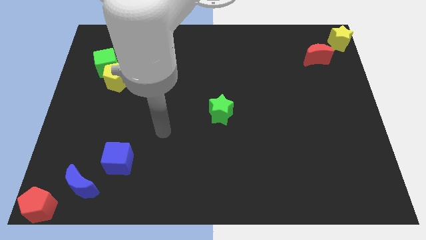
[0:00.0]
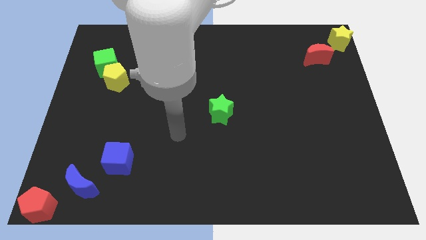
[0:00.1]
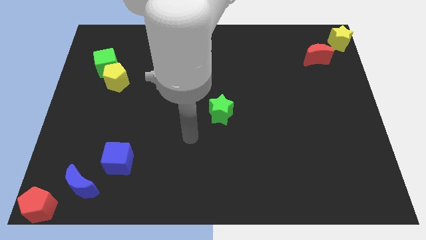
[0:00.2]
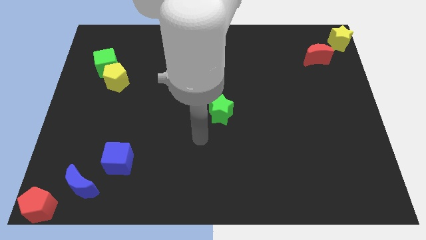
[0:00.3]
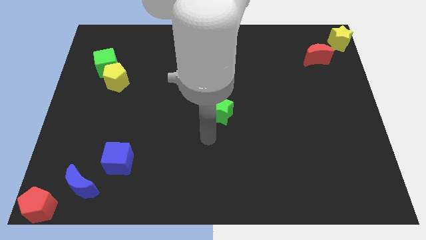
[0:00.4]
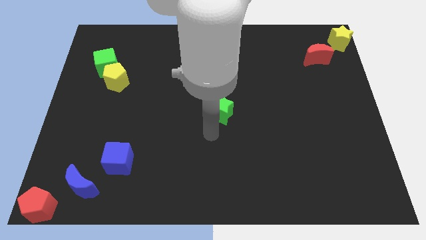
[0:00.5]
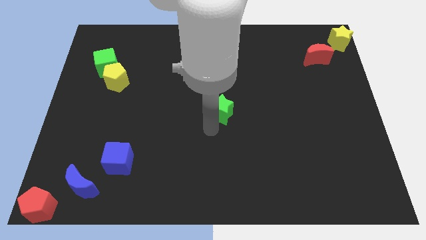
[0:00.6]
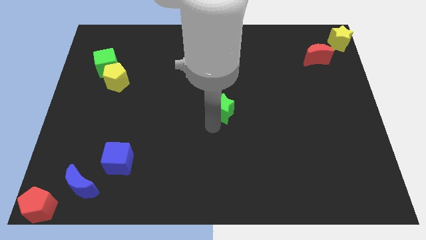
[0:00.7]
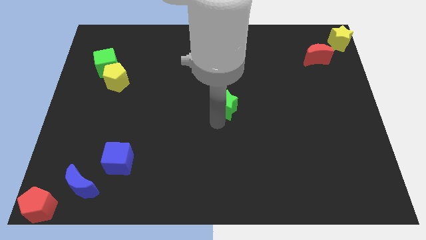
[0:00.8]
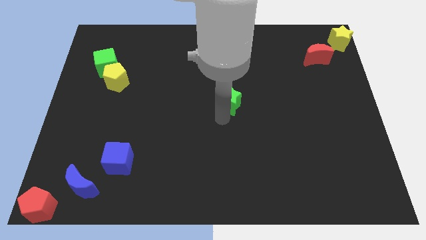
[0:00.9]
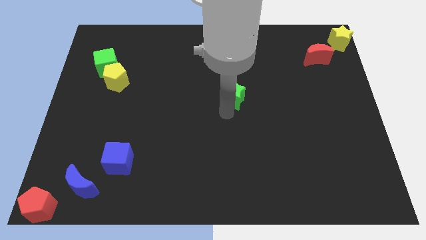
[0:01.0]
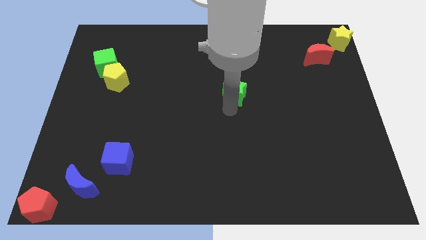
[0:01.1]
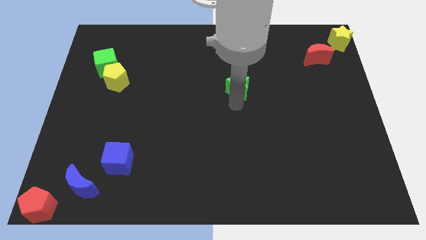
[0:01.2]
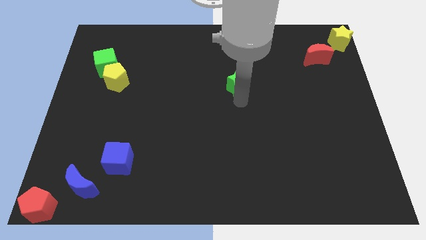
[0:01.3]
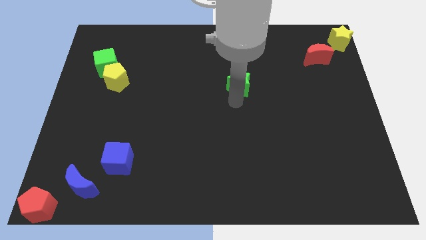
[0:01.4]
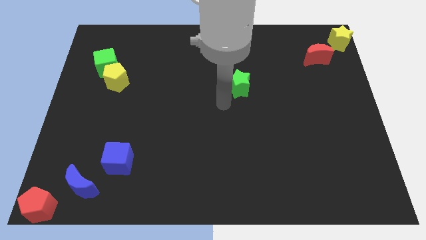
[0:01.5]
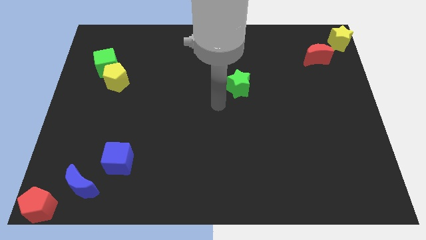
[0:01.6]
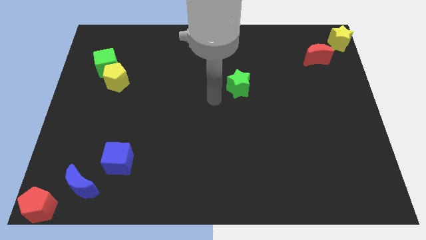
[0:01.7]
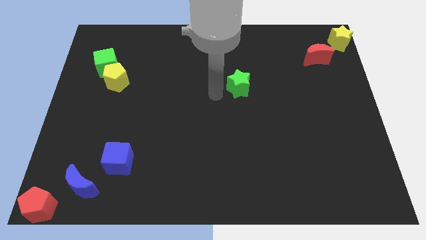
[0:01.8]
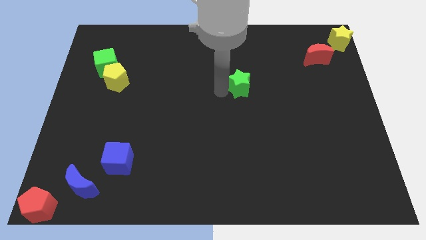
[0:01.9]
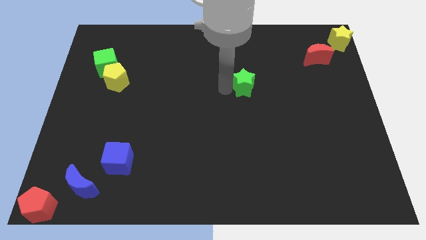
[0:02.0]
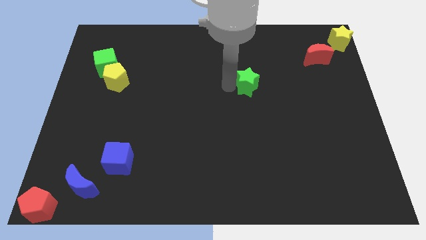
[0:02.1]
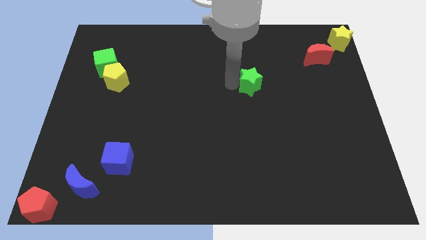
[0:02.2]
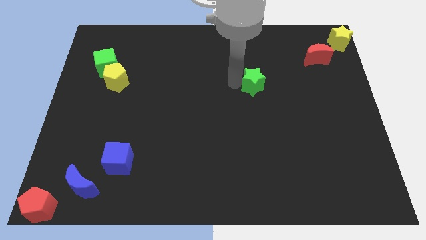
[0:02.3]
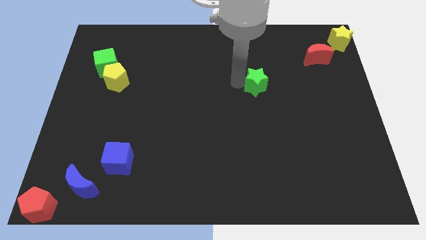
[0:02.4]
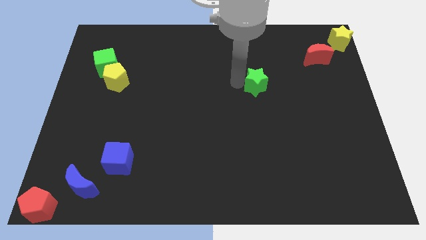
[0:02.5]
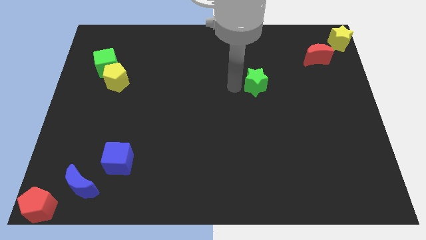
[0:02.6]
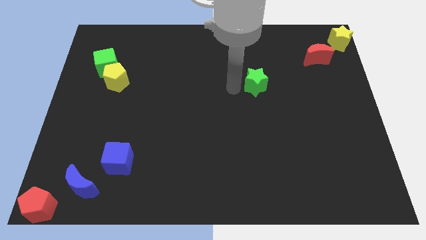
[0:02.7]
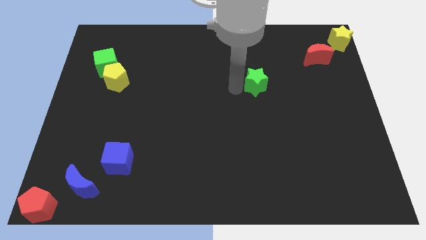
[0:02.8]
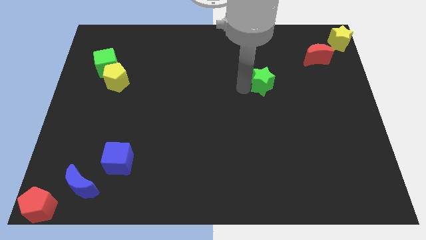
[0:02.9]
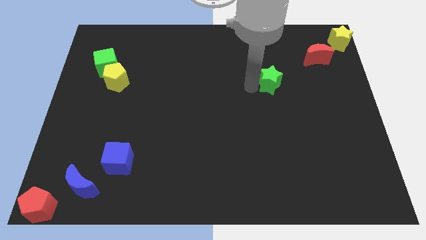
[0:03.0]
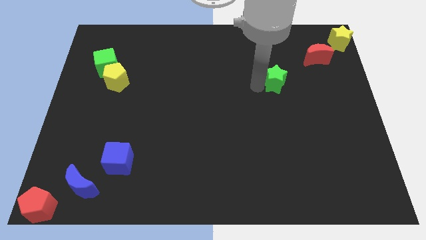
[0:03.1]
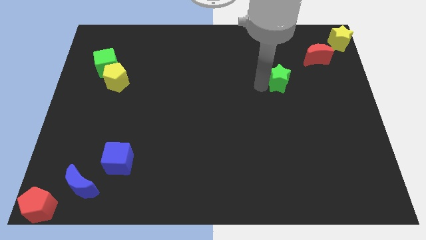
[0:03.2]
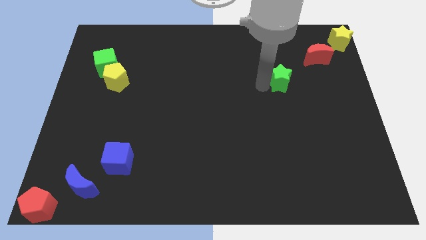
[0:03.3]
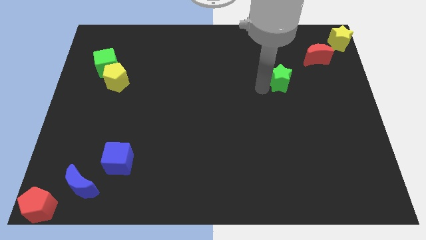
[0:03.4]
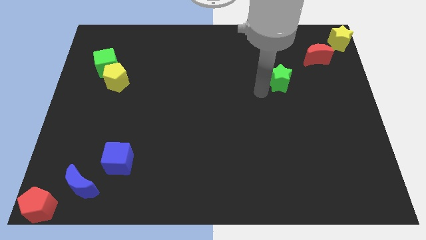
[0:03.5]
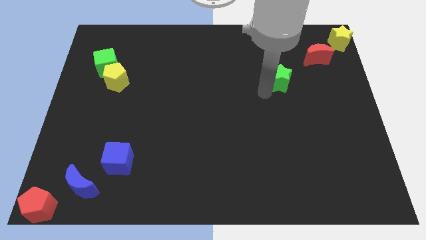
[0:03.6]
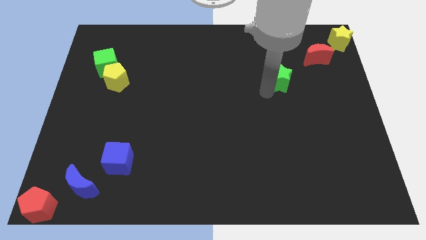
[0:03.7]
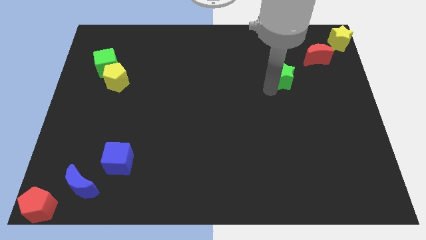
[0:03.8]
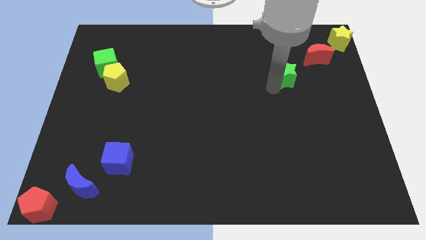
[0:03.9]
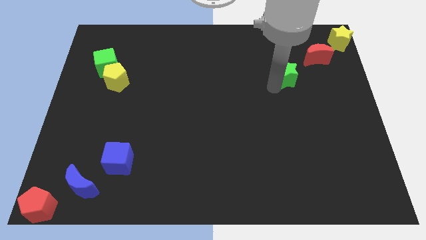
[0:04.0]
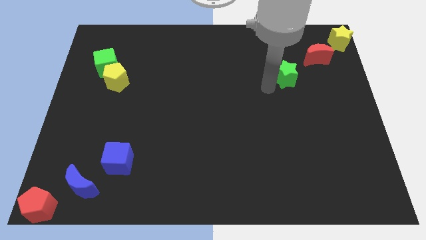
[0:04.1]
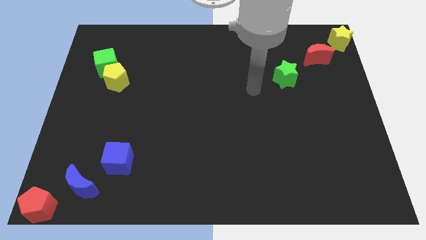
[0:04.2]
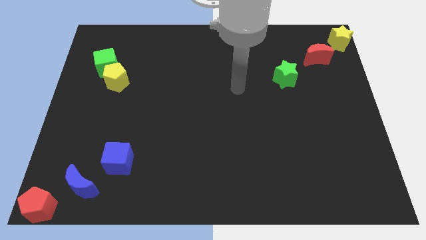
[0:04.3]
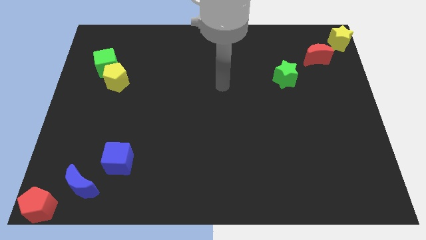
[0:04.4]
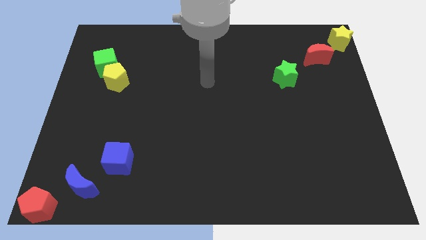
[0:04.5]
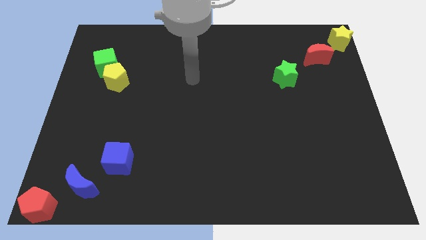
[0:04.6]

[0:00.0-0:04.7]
move green star diagonally below the red moon

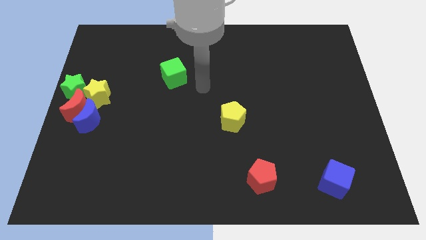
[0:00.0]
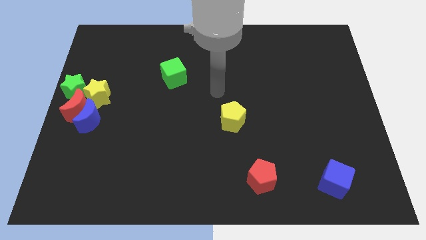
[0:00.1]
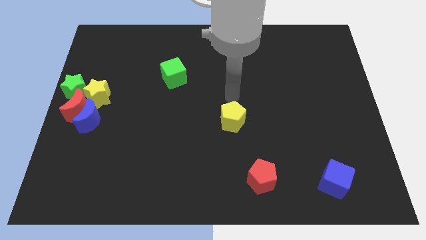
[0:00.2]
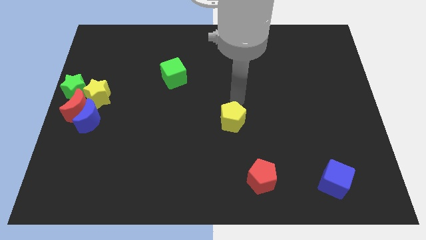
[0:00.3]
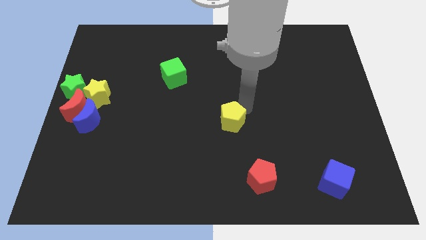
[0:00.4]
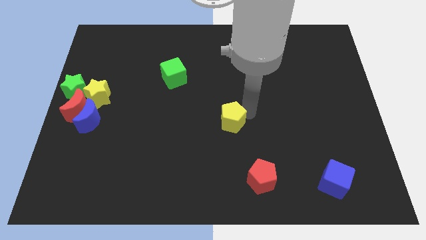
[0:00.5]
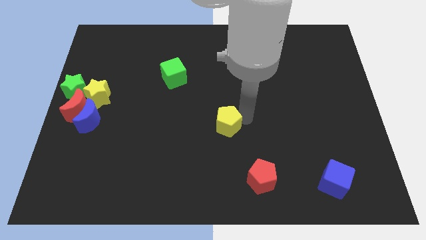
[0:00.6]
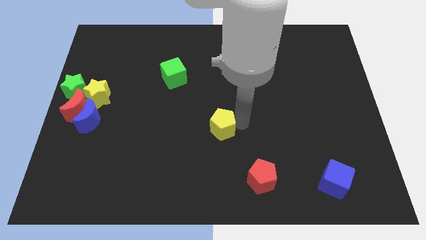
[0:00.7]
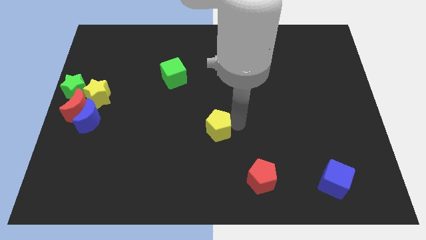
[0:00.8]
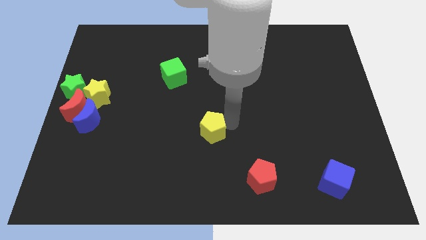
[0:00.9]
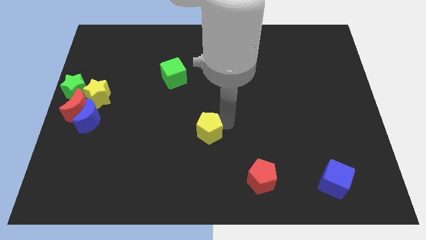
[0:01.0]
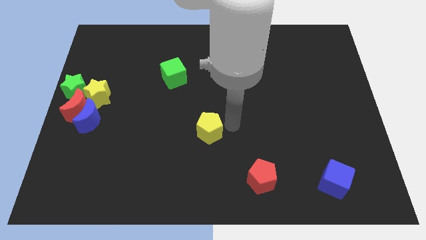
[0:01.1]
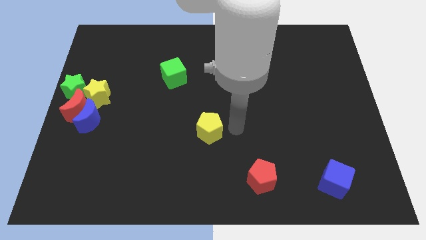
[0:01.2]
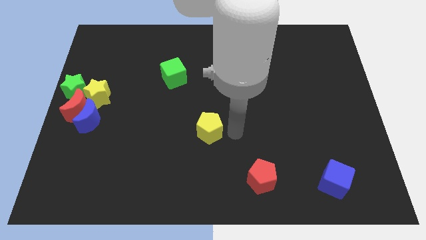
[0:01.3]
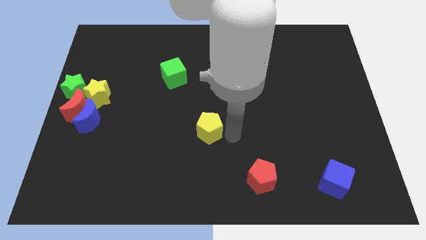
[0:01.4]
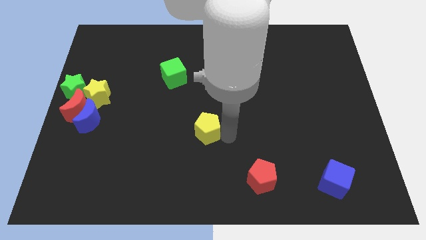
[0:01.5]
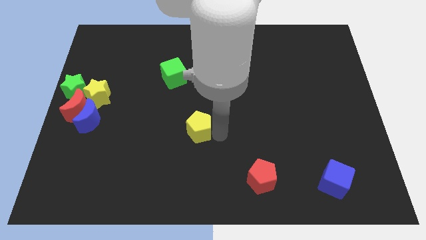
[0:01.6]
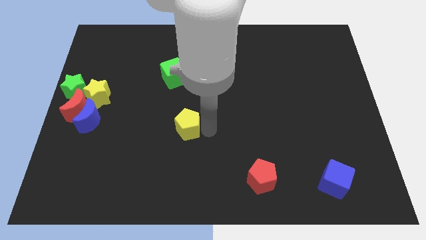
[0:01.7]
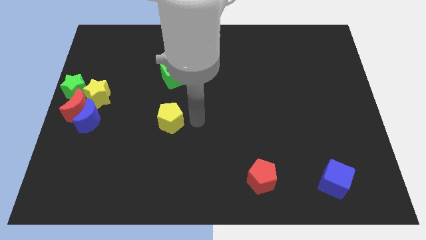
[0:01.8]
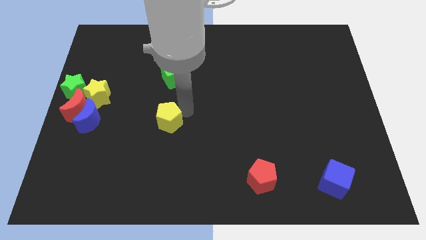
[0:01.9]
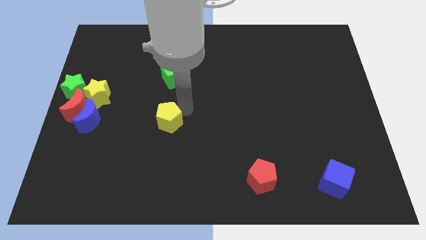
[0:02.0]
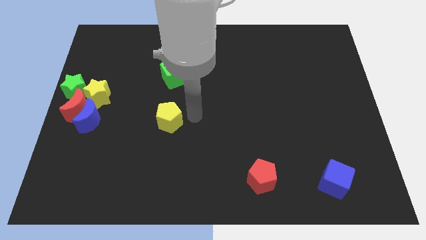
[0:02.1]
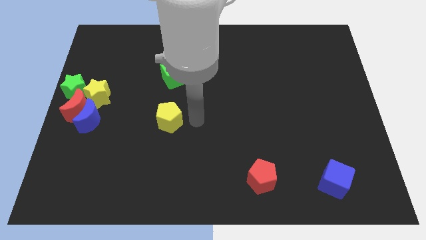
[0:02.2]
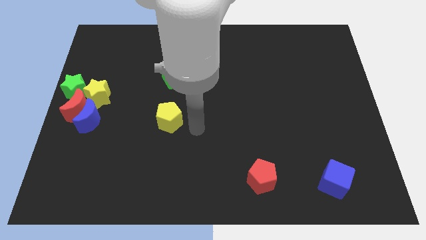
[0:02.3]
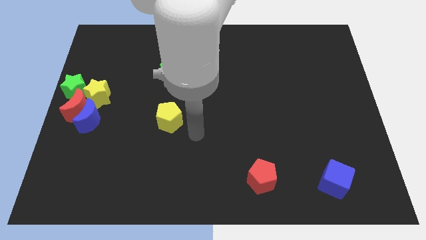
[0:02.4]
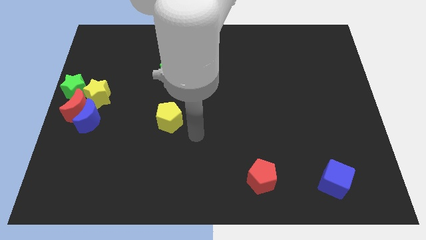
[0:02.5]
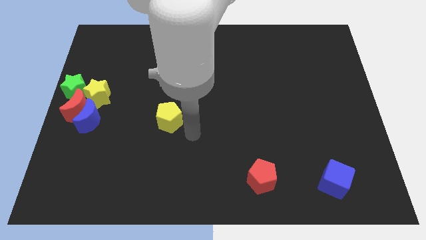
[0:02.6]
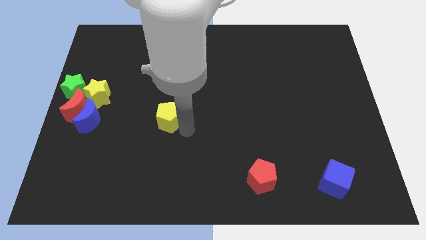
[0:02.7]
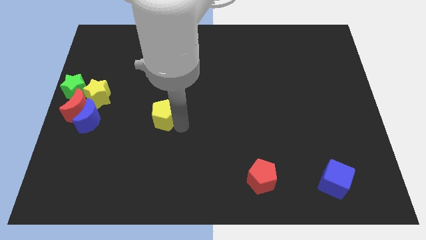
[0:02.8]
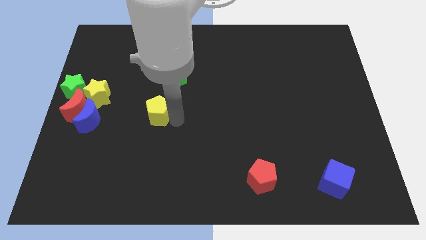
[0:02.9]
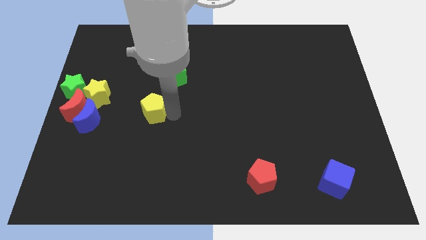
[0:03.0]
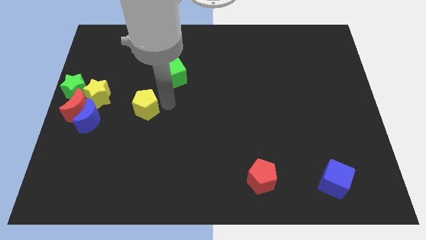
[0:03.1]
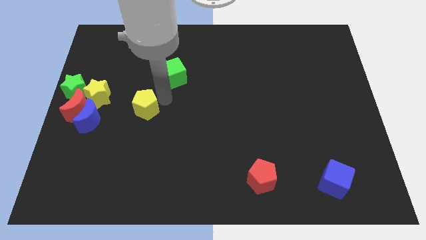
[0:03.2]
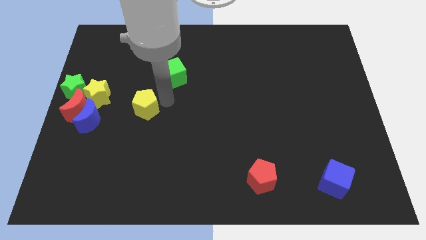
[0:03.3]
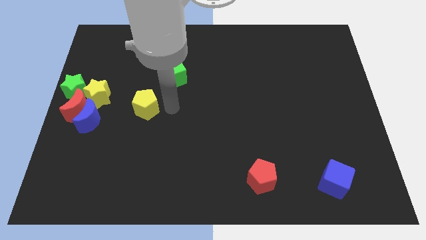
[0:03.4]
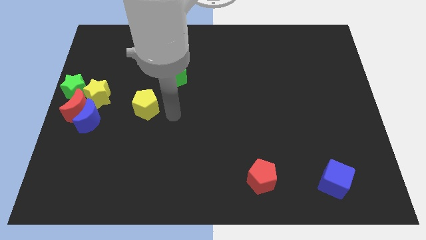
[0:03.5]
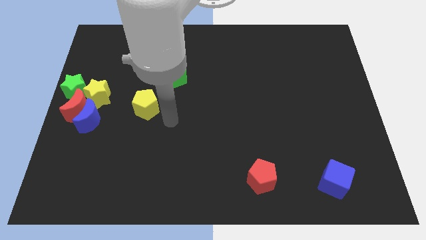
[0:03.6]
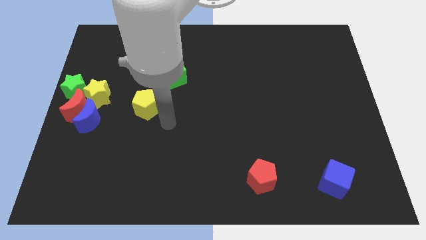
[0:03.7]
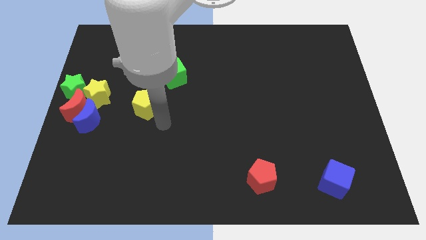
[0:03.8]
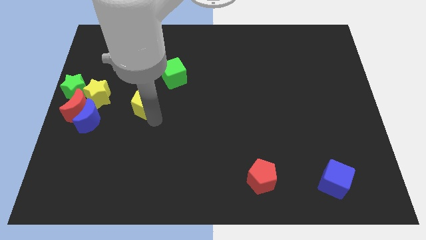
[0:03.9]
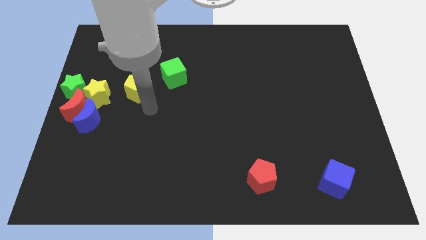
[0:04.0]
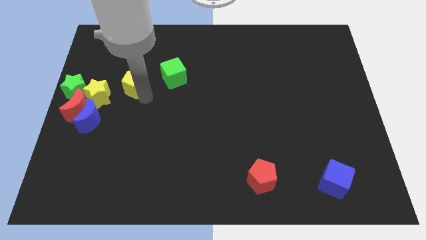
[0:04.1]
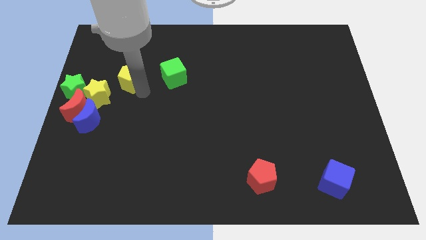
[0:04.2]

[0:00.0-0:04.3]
place yellow pentagon in between yellow star and green cube
